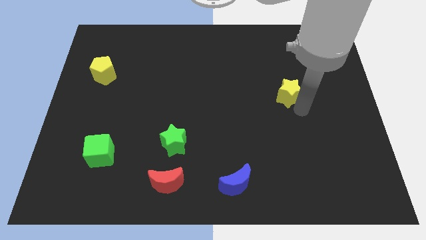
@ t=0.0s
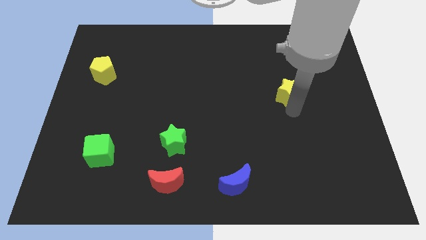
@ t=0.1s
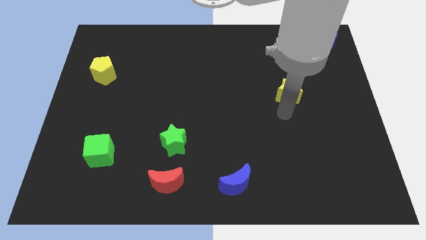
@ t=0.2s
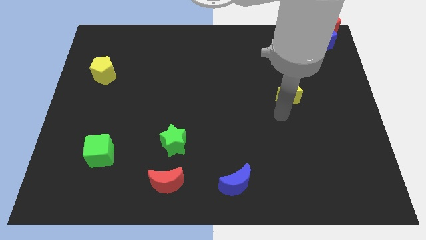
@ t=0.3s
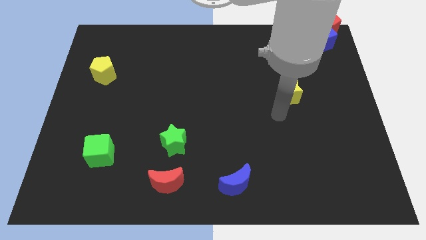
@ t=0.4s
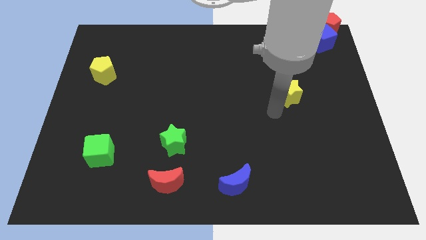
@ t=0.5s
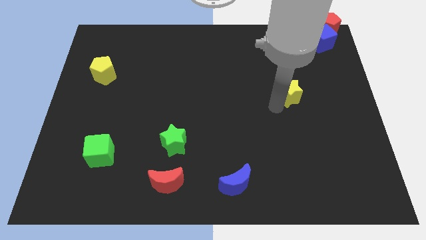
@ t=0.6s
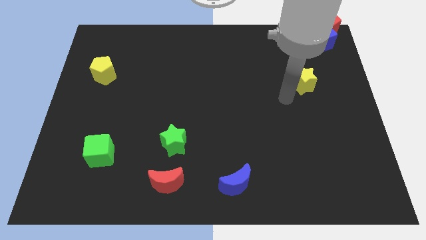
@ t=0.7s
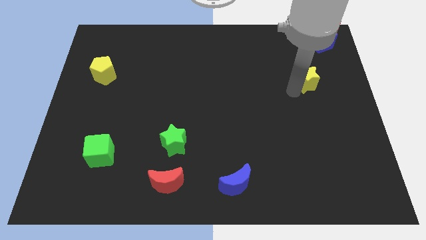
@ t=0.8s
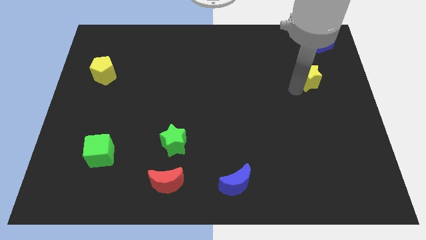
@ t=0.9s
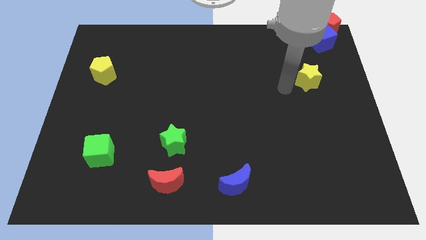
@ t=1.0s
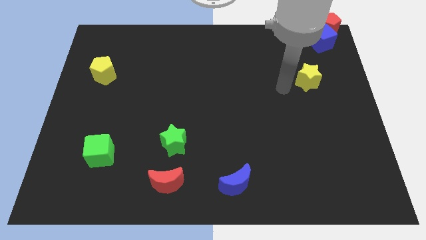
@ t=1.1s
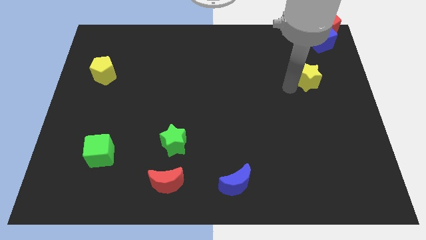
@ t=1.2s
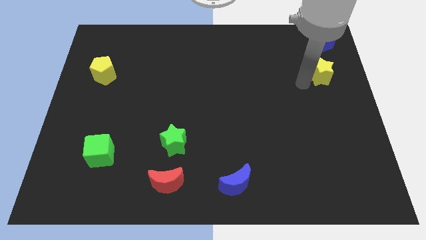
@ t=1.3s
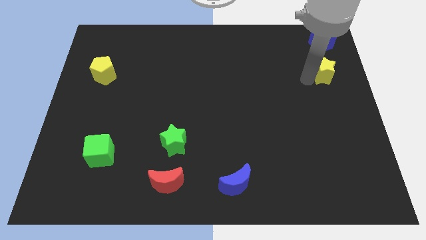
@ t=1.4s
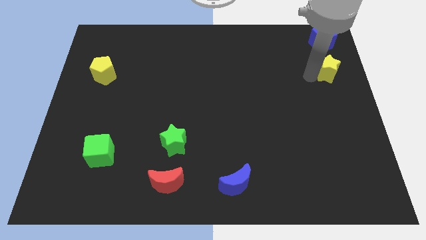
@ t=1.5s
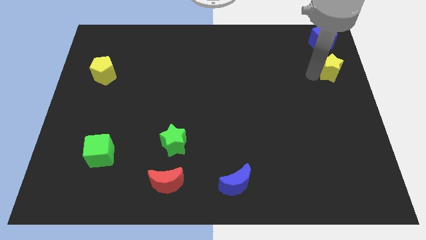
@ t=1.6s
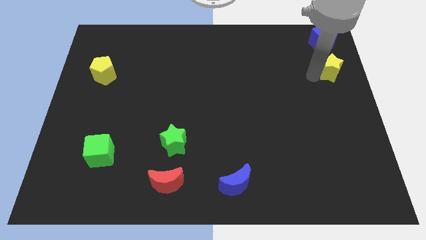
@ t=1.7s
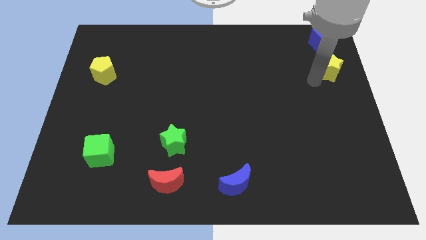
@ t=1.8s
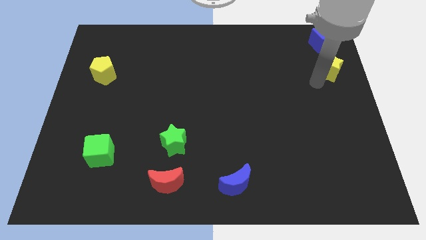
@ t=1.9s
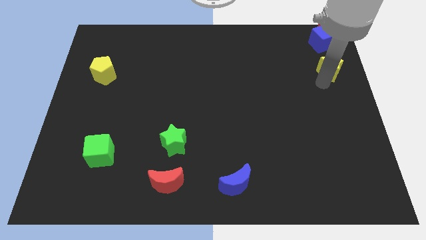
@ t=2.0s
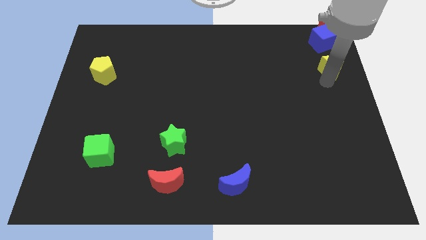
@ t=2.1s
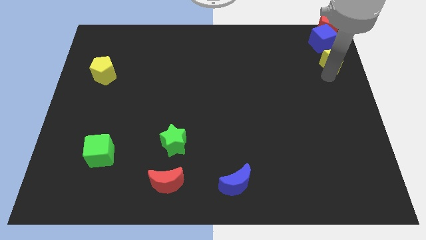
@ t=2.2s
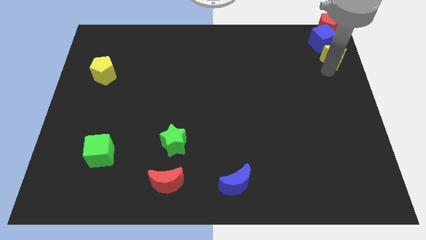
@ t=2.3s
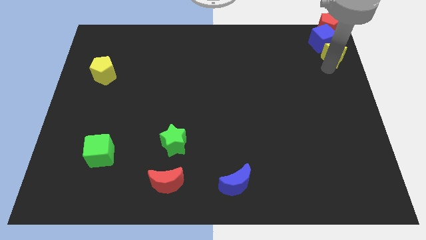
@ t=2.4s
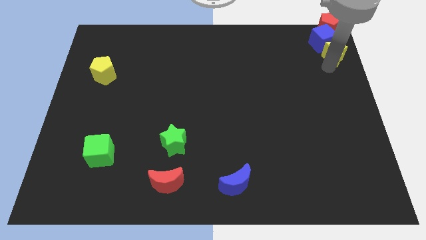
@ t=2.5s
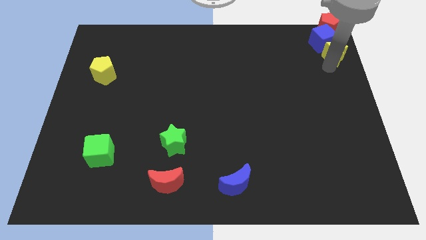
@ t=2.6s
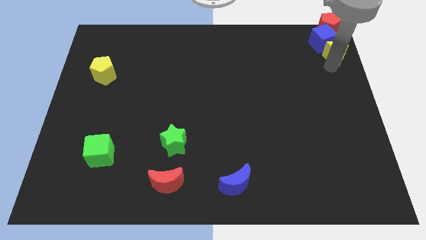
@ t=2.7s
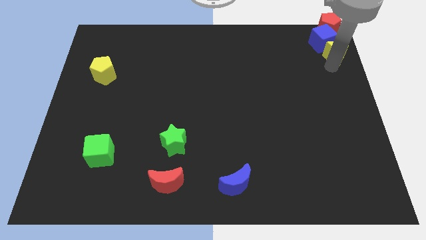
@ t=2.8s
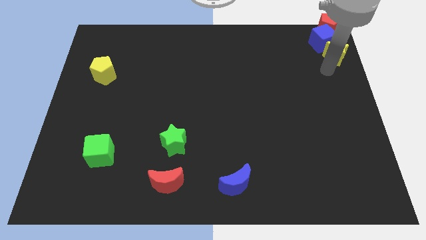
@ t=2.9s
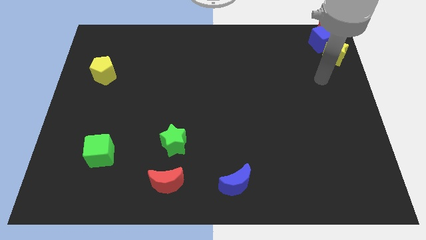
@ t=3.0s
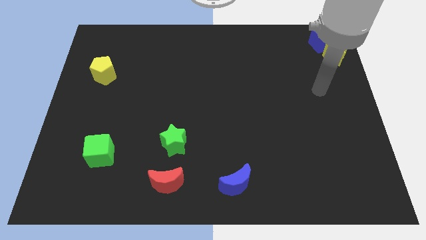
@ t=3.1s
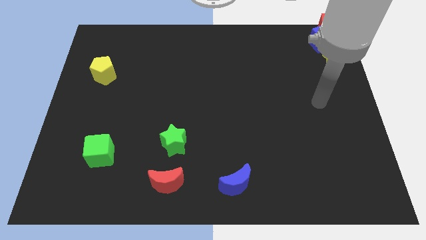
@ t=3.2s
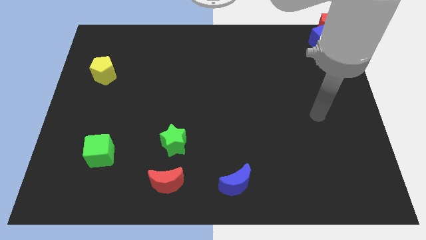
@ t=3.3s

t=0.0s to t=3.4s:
push the yellow star into the blue cube

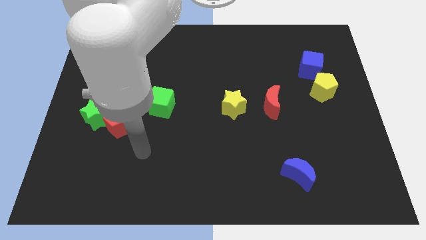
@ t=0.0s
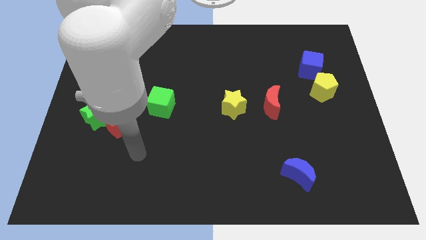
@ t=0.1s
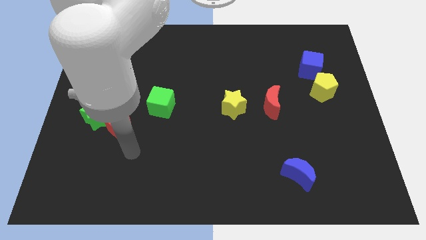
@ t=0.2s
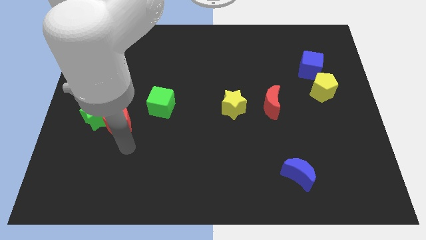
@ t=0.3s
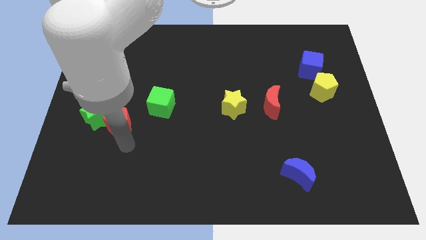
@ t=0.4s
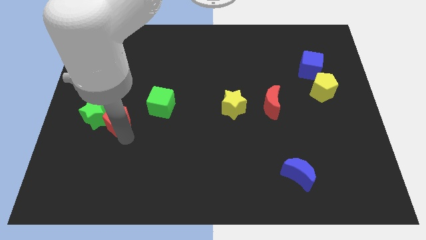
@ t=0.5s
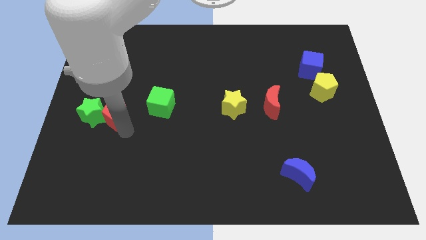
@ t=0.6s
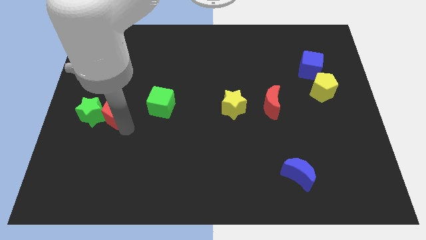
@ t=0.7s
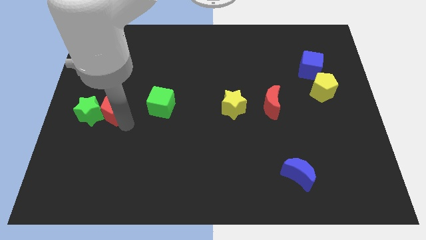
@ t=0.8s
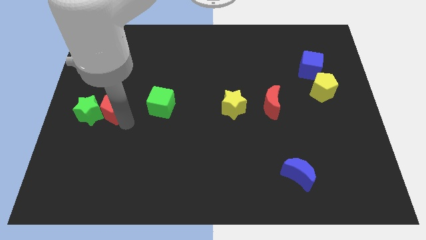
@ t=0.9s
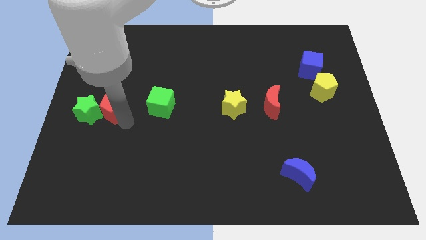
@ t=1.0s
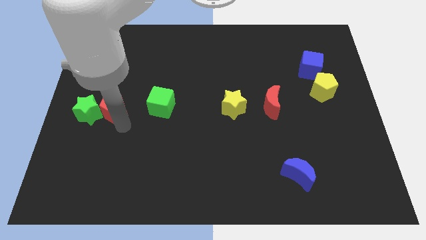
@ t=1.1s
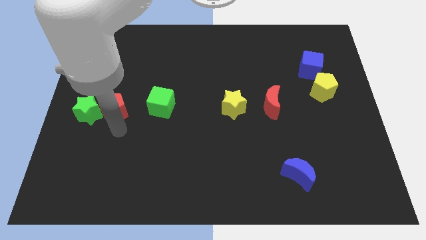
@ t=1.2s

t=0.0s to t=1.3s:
push red pentagon along with the green star towards center left

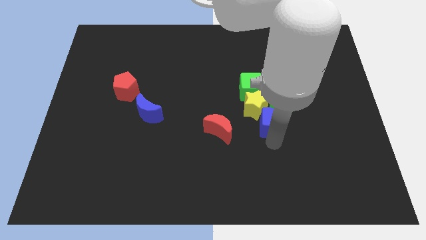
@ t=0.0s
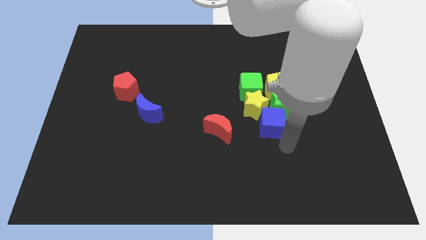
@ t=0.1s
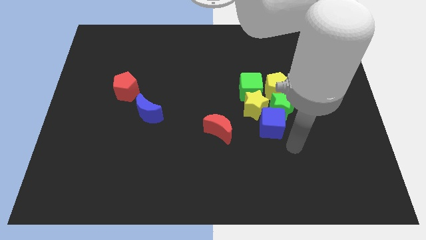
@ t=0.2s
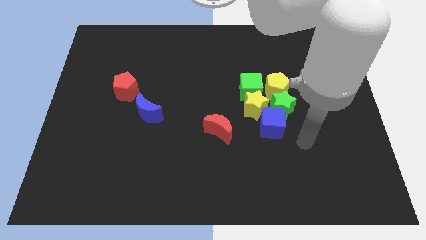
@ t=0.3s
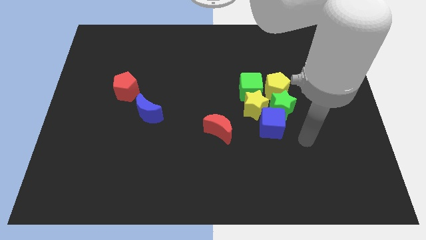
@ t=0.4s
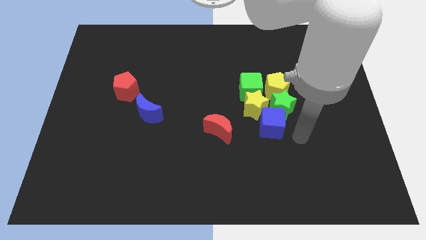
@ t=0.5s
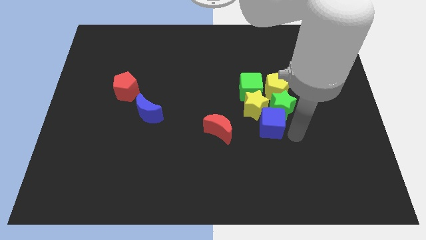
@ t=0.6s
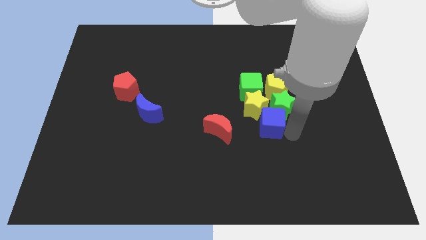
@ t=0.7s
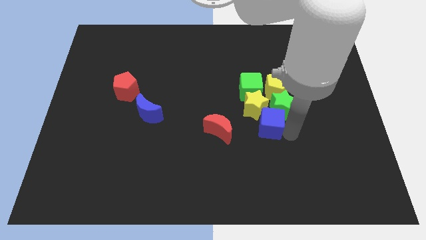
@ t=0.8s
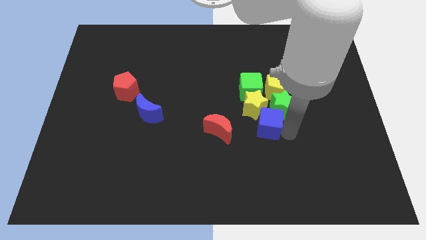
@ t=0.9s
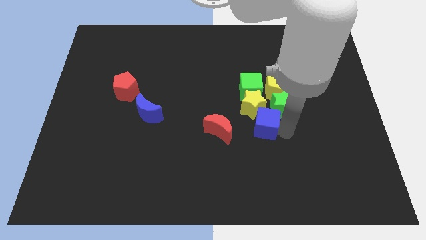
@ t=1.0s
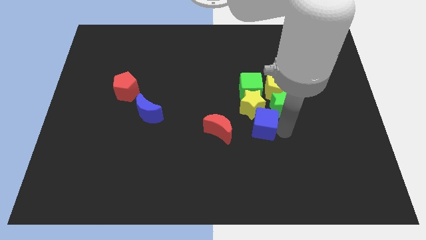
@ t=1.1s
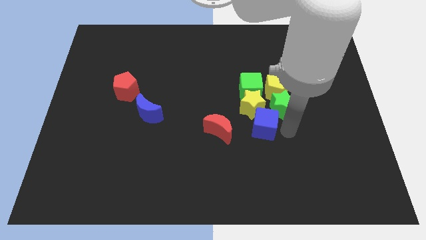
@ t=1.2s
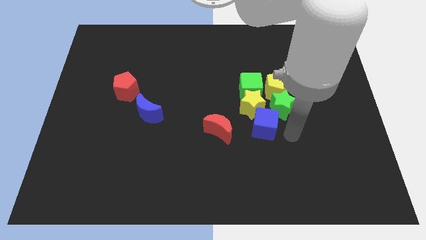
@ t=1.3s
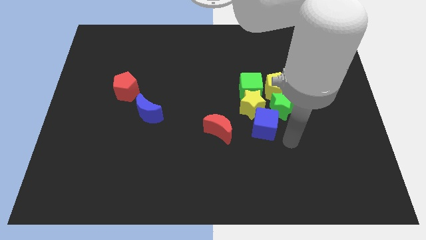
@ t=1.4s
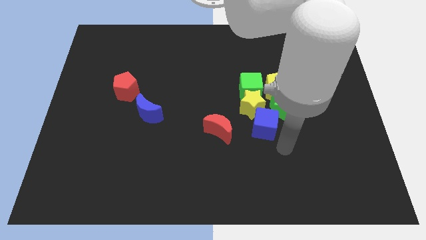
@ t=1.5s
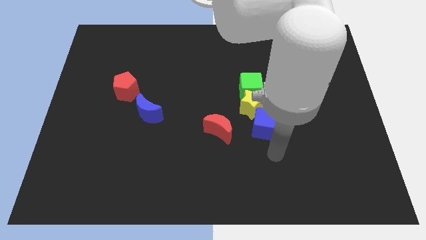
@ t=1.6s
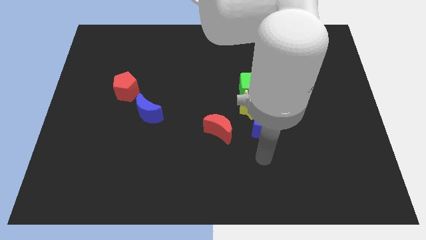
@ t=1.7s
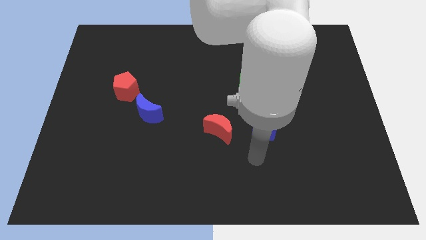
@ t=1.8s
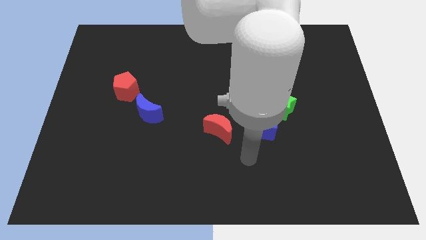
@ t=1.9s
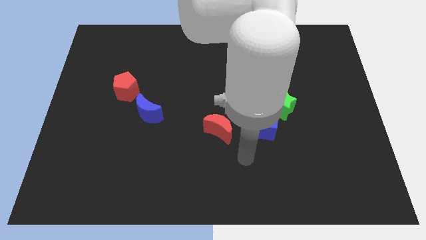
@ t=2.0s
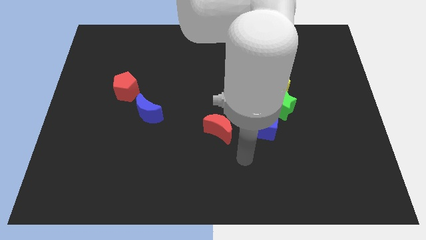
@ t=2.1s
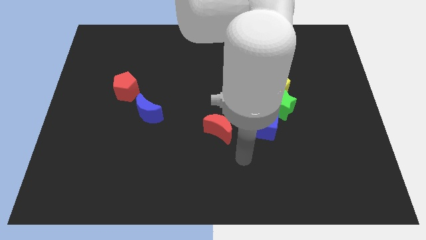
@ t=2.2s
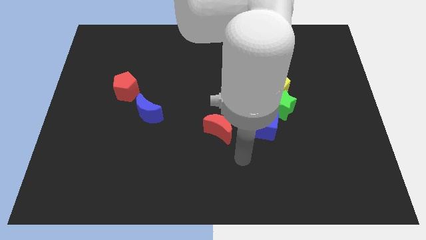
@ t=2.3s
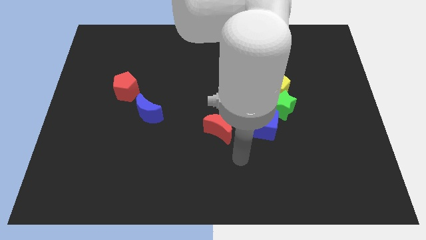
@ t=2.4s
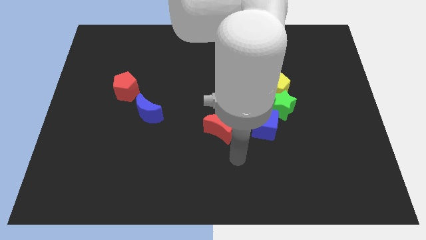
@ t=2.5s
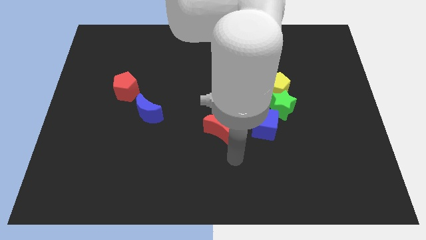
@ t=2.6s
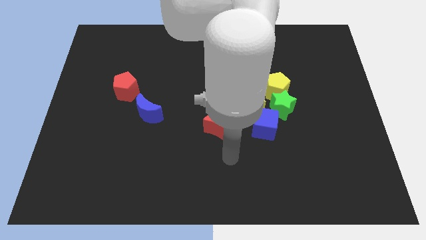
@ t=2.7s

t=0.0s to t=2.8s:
move blue cube slightly towards yellow star

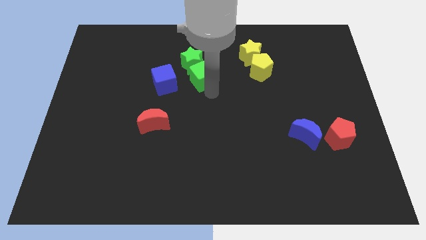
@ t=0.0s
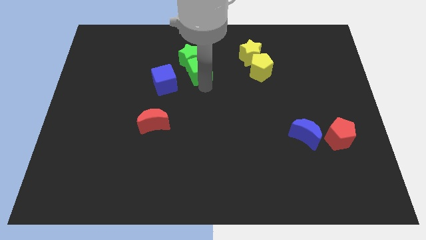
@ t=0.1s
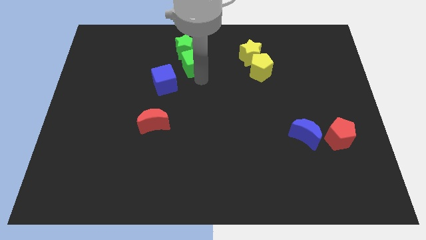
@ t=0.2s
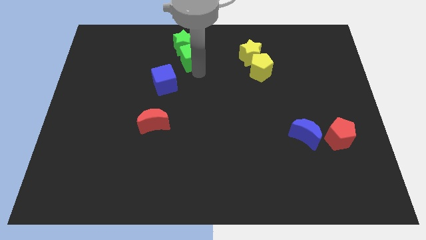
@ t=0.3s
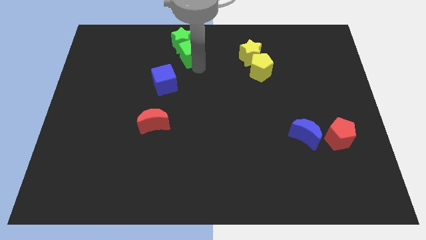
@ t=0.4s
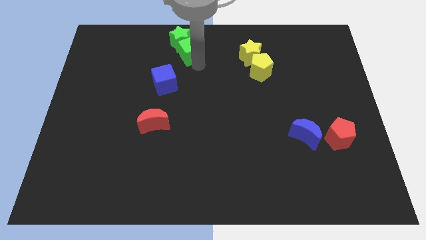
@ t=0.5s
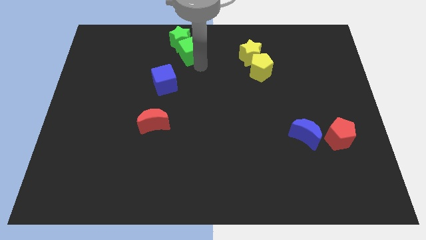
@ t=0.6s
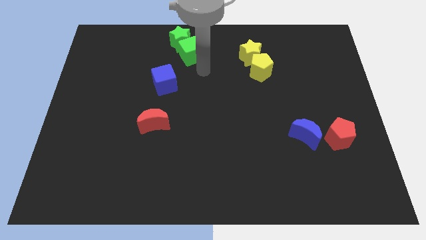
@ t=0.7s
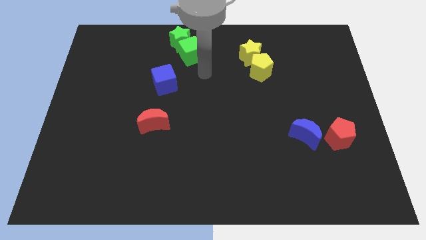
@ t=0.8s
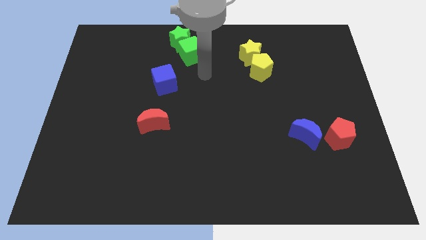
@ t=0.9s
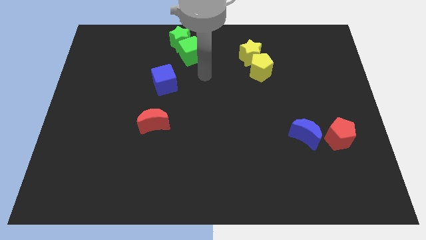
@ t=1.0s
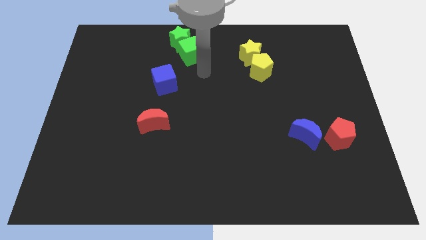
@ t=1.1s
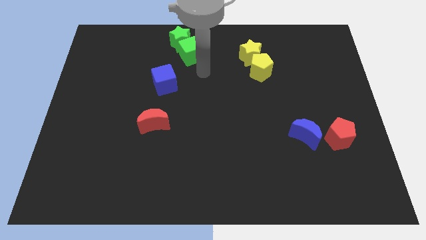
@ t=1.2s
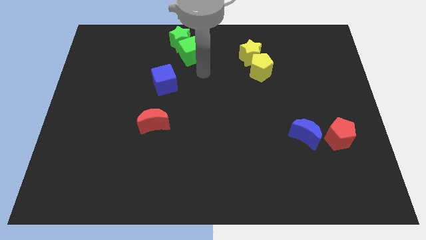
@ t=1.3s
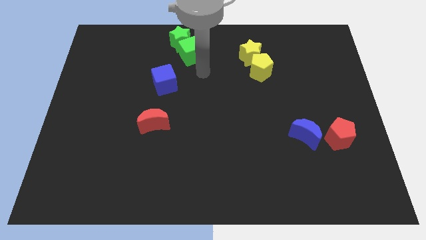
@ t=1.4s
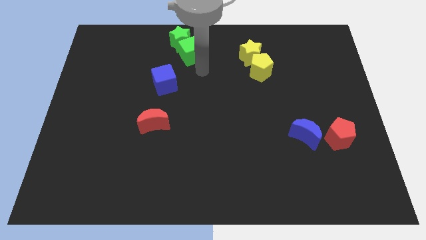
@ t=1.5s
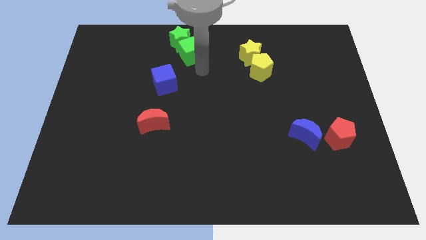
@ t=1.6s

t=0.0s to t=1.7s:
push the green star and green cube to the top of the board
